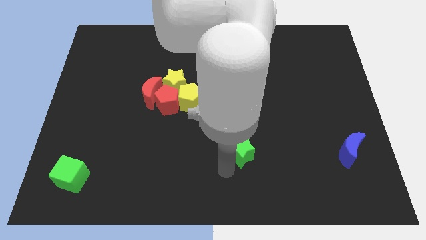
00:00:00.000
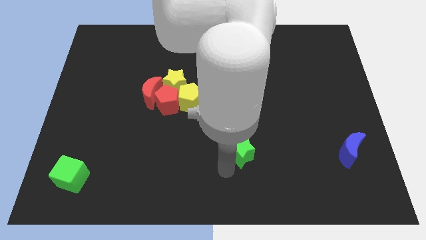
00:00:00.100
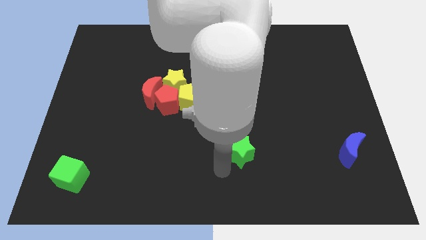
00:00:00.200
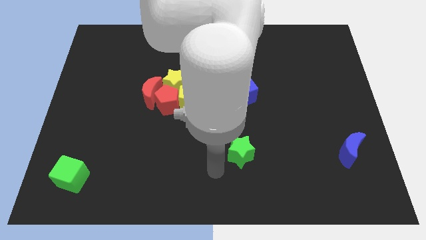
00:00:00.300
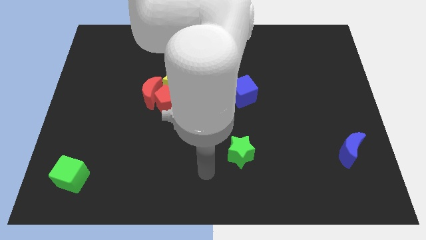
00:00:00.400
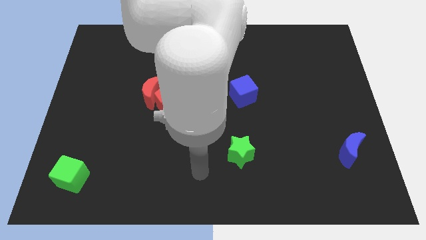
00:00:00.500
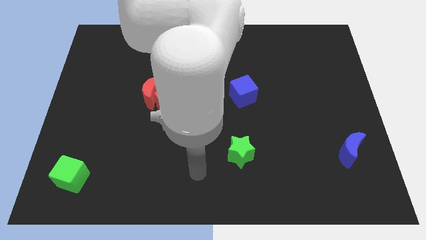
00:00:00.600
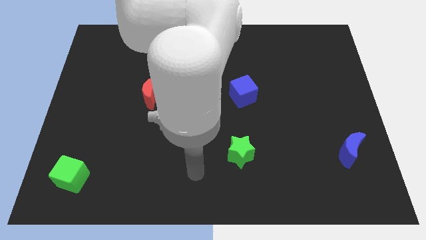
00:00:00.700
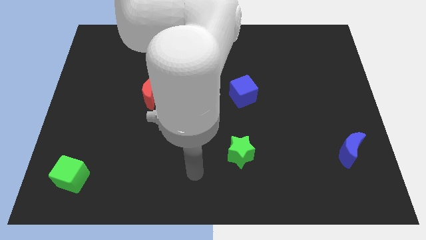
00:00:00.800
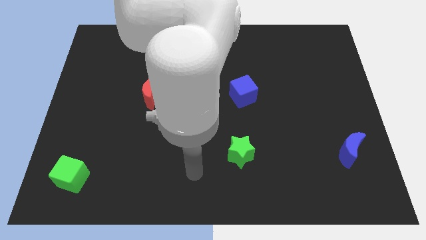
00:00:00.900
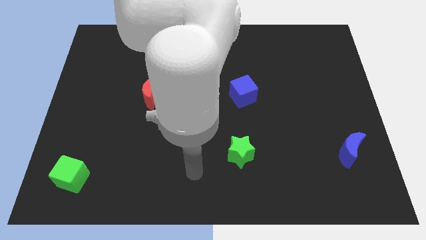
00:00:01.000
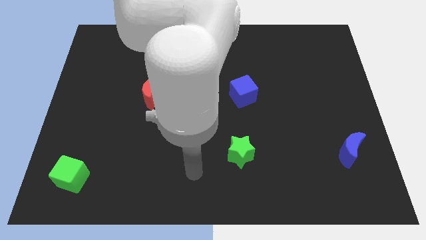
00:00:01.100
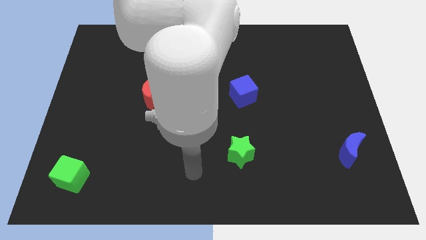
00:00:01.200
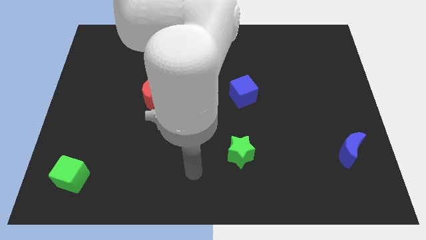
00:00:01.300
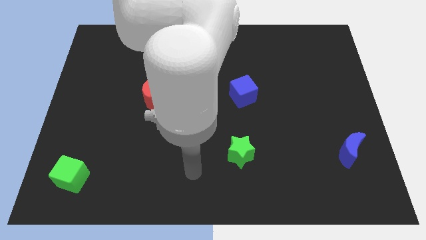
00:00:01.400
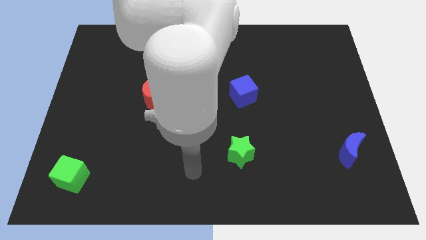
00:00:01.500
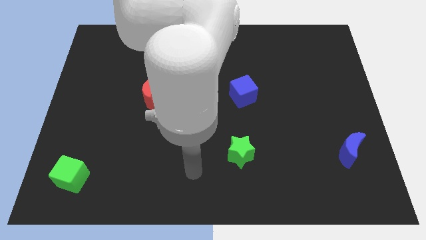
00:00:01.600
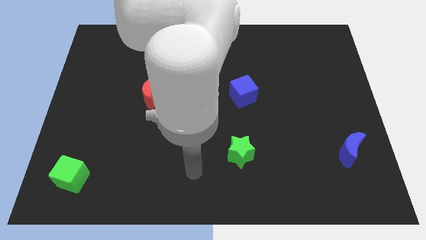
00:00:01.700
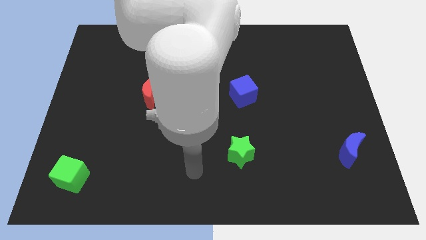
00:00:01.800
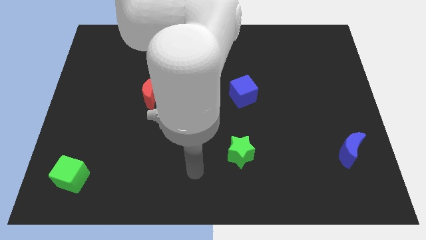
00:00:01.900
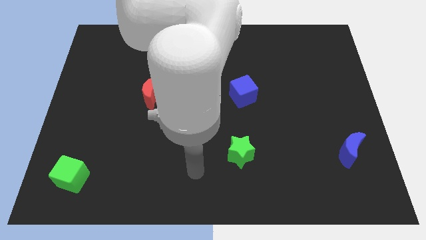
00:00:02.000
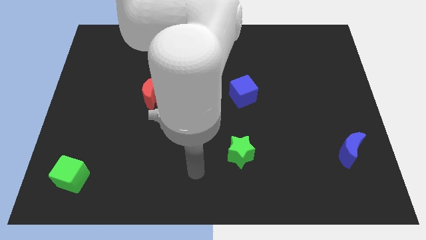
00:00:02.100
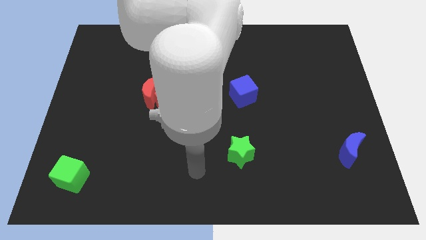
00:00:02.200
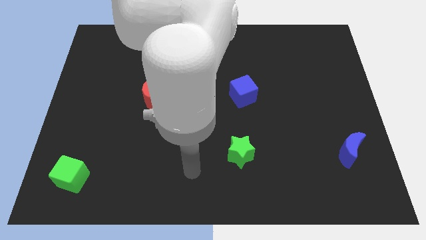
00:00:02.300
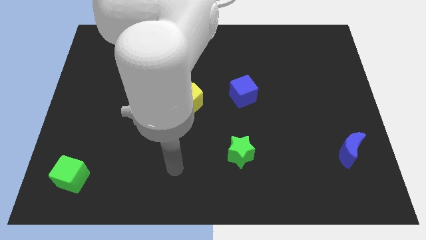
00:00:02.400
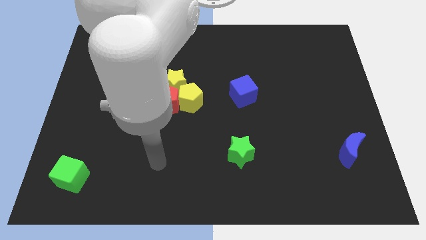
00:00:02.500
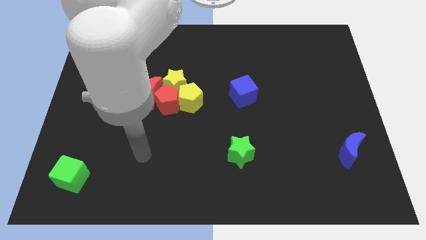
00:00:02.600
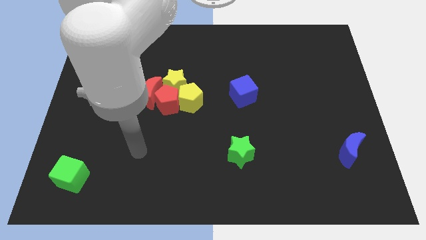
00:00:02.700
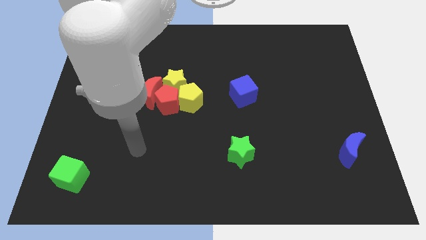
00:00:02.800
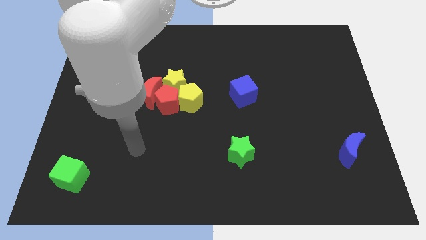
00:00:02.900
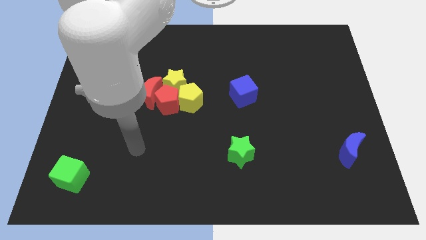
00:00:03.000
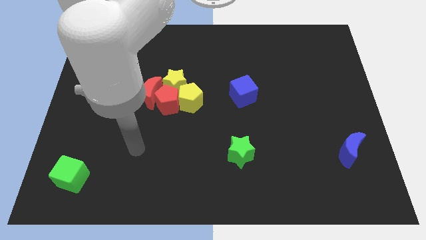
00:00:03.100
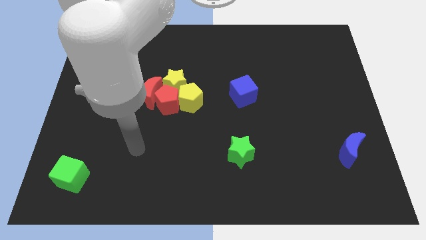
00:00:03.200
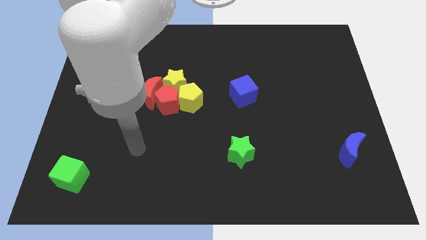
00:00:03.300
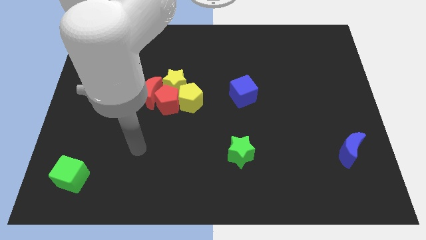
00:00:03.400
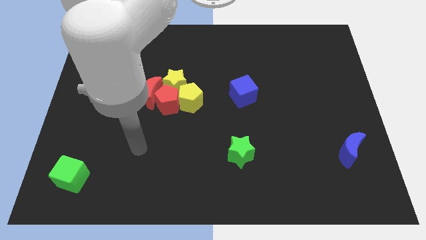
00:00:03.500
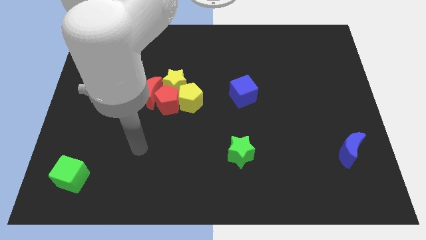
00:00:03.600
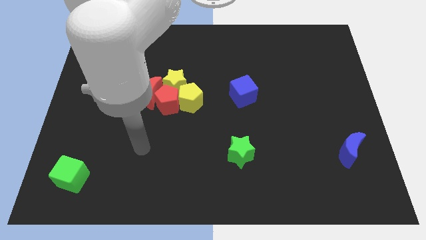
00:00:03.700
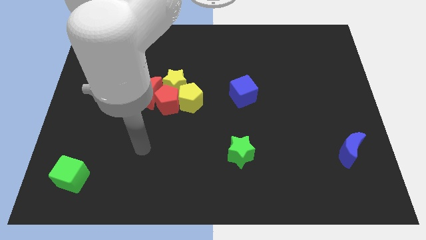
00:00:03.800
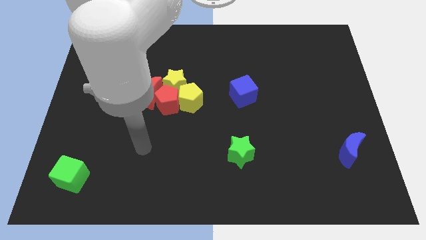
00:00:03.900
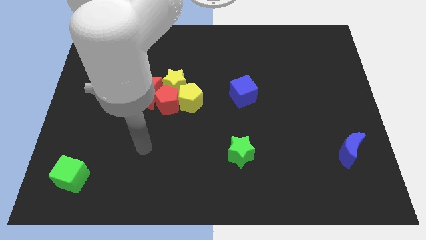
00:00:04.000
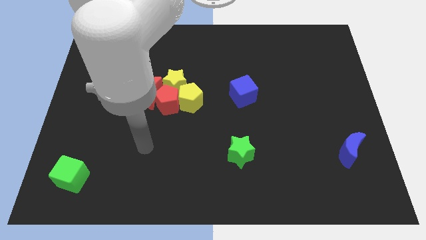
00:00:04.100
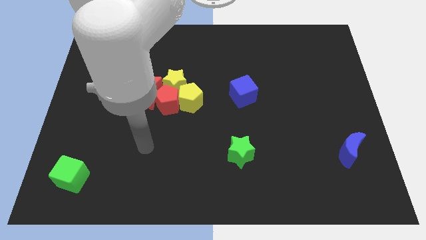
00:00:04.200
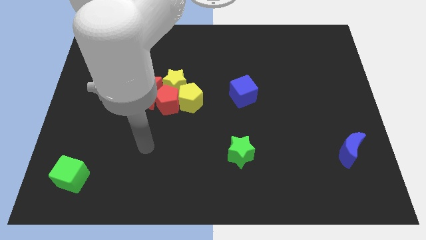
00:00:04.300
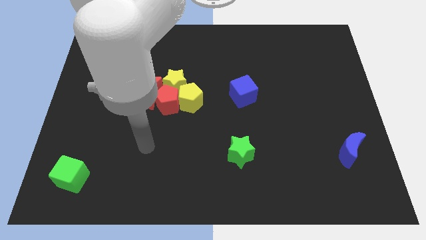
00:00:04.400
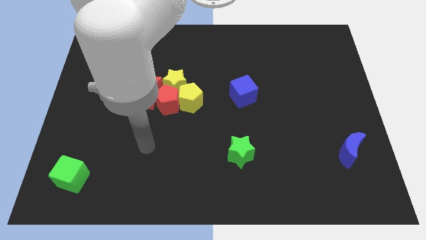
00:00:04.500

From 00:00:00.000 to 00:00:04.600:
move your arm away from the green star

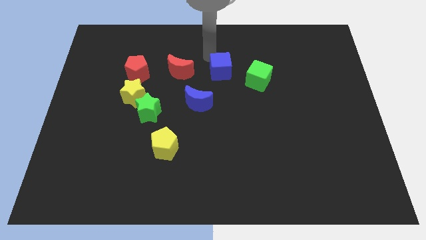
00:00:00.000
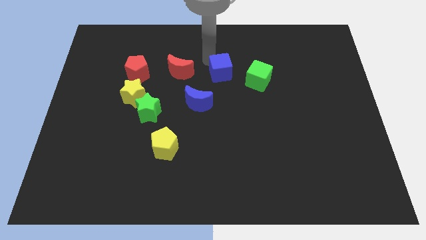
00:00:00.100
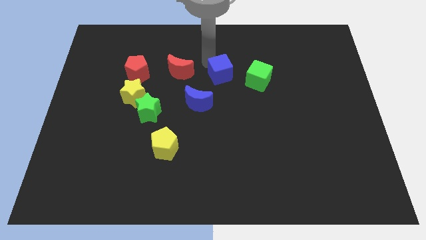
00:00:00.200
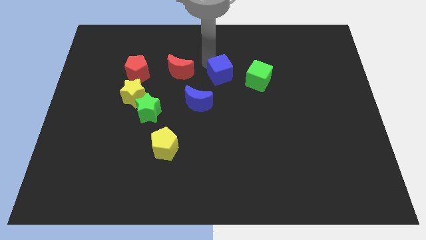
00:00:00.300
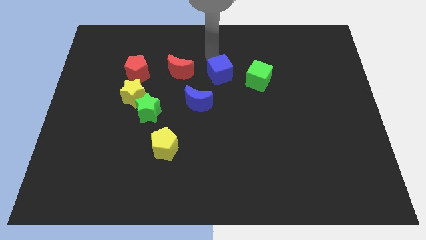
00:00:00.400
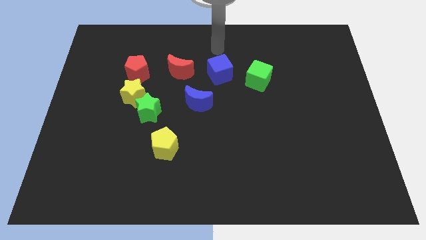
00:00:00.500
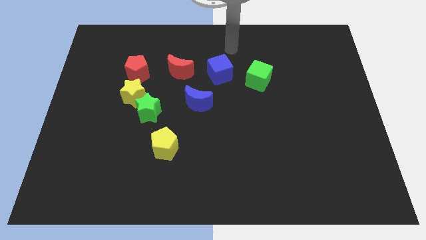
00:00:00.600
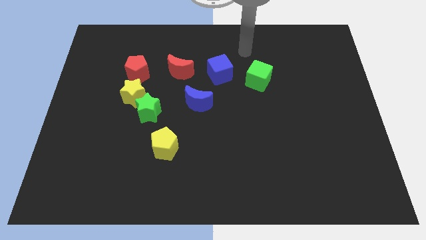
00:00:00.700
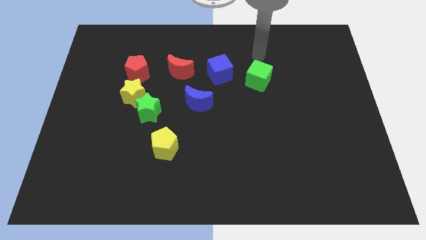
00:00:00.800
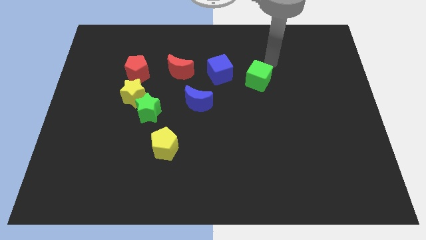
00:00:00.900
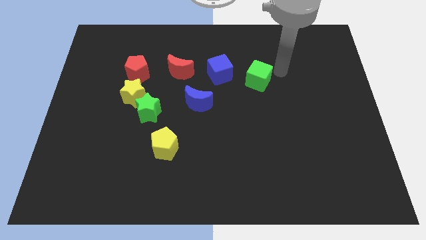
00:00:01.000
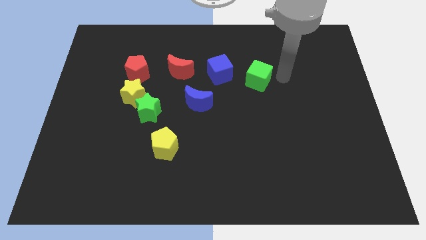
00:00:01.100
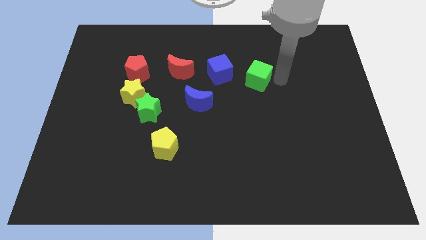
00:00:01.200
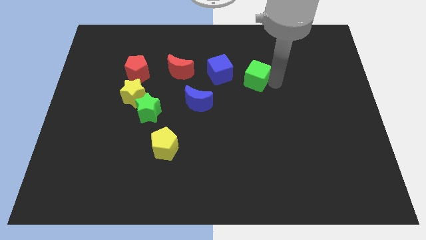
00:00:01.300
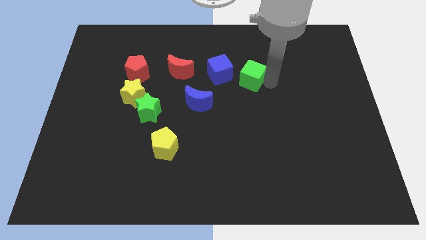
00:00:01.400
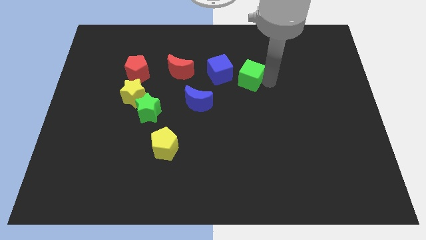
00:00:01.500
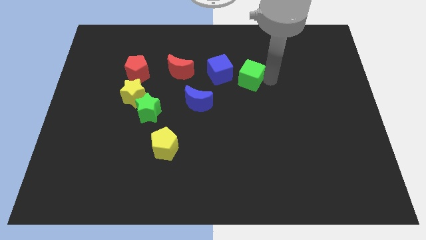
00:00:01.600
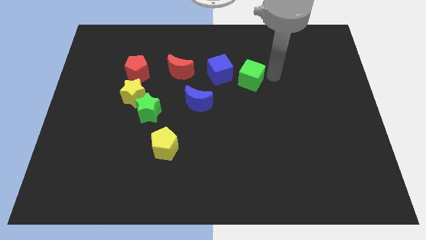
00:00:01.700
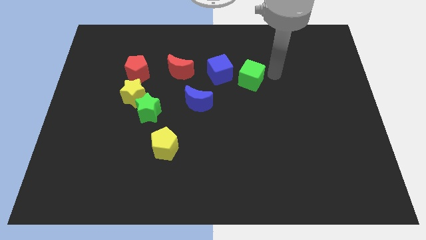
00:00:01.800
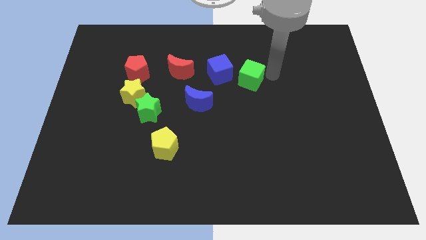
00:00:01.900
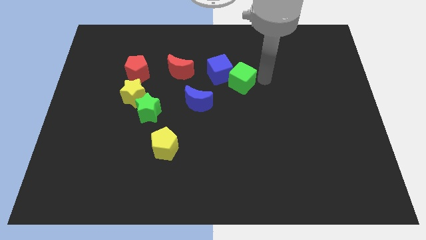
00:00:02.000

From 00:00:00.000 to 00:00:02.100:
push the green cube near to the blue cube

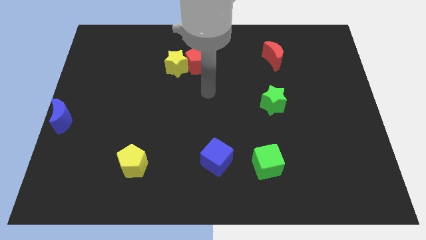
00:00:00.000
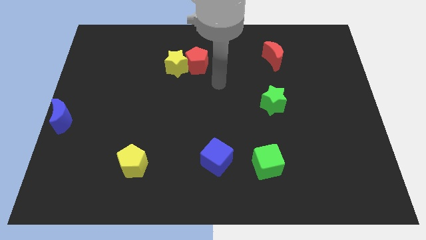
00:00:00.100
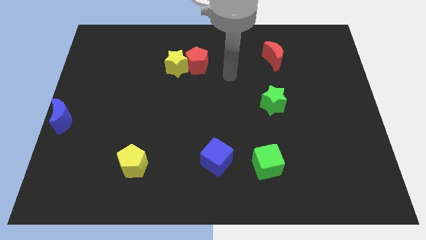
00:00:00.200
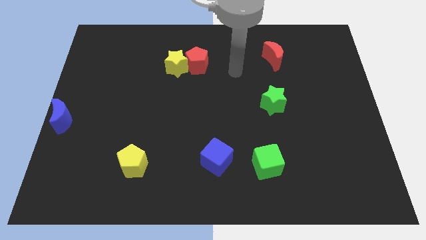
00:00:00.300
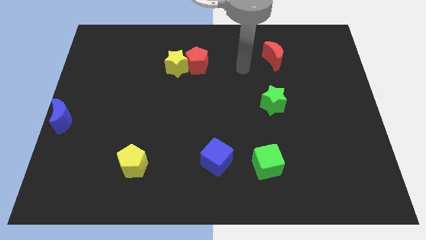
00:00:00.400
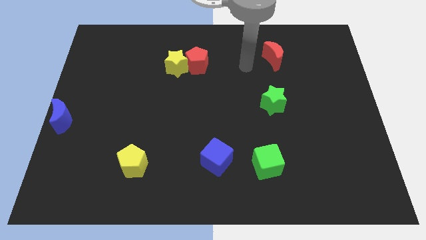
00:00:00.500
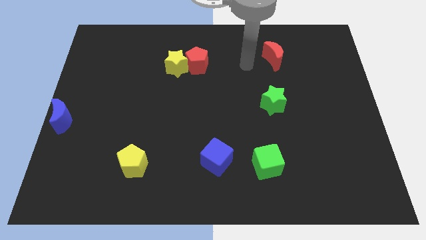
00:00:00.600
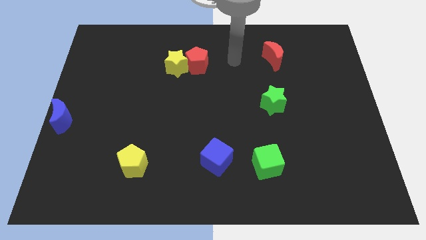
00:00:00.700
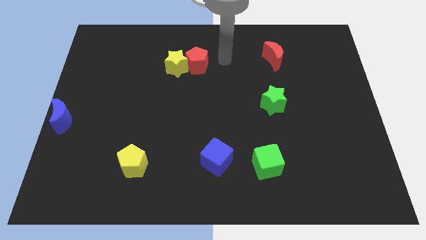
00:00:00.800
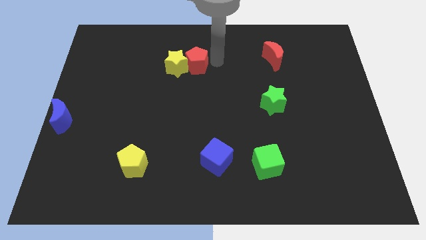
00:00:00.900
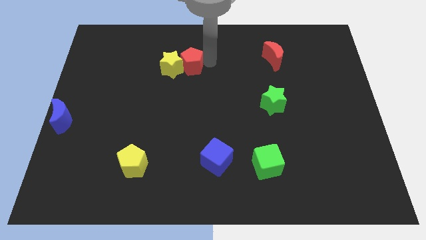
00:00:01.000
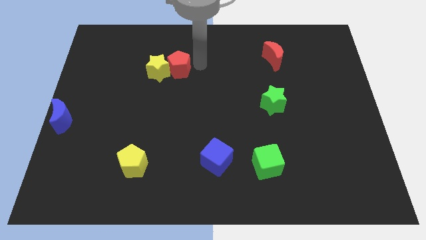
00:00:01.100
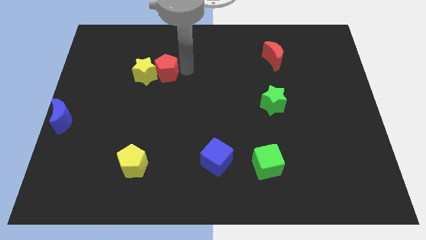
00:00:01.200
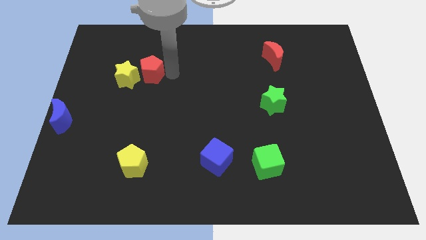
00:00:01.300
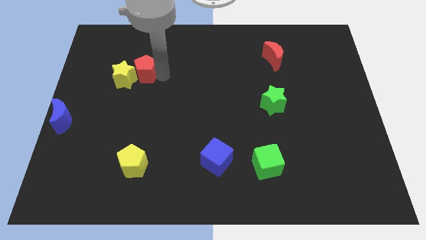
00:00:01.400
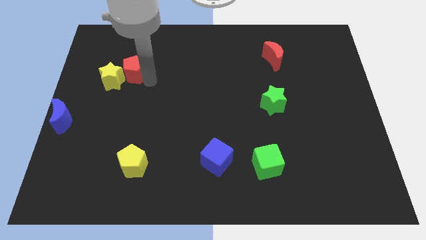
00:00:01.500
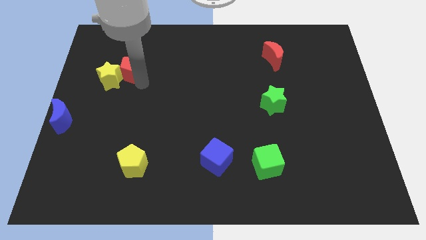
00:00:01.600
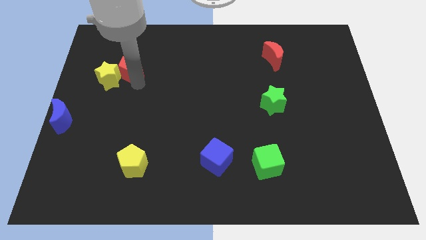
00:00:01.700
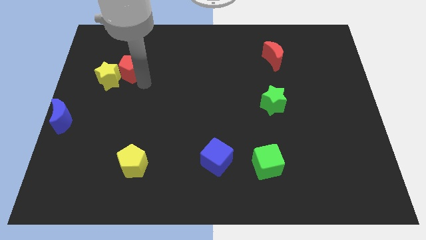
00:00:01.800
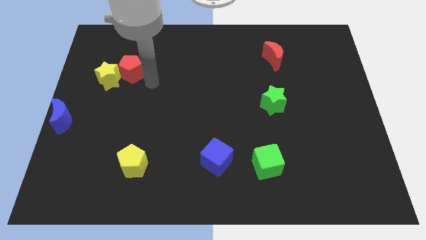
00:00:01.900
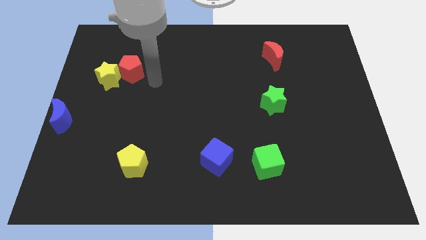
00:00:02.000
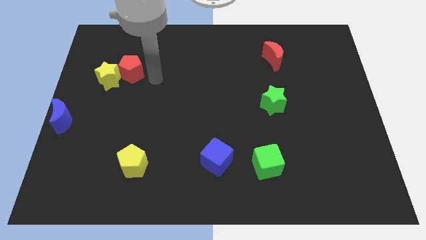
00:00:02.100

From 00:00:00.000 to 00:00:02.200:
push the yellow star and the red pentagon to the left
